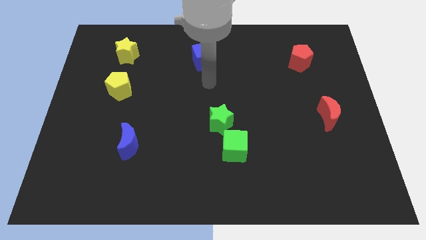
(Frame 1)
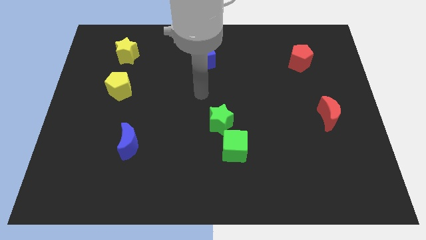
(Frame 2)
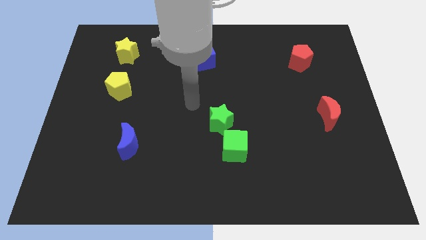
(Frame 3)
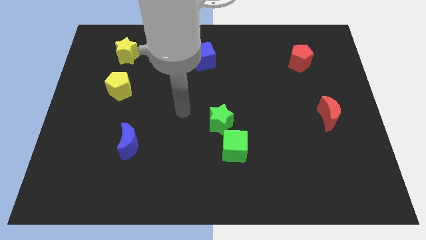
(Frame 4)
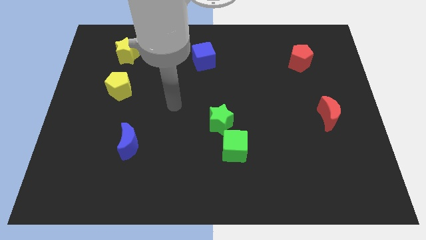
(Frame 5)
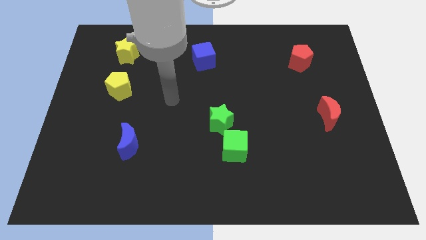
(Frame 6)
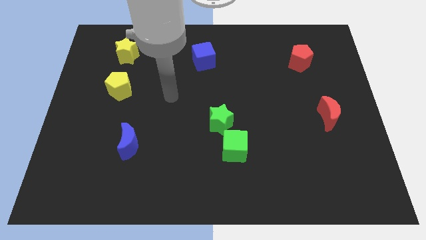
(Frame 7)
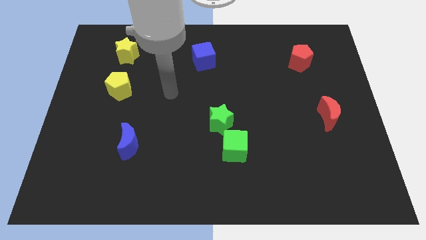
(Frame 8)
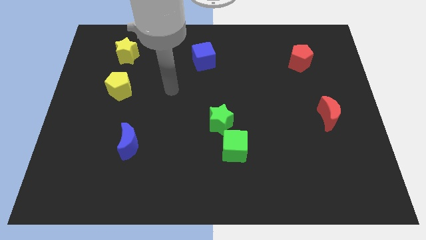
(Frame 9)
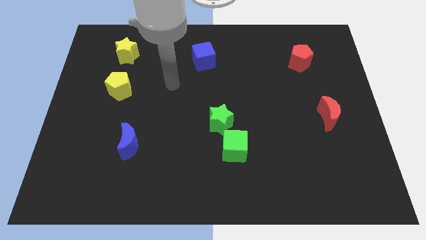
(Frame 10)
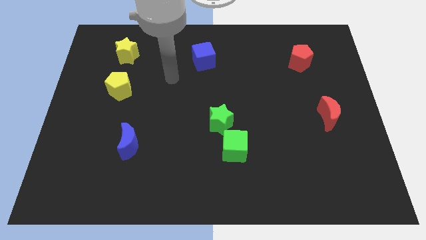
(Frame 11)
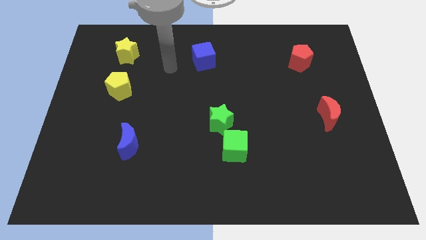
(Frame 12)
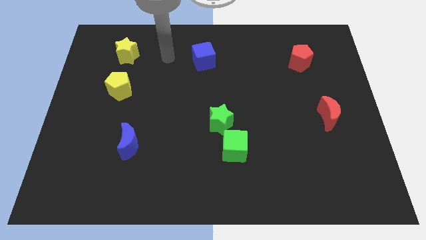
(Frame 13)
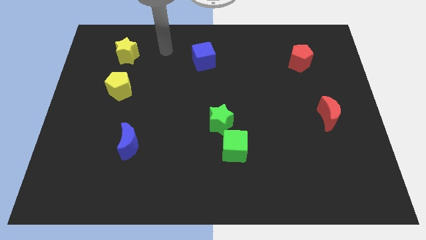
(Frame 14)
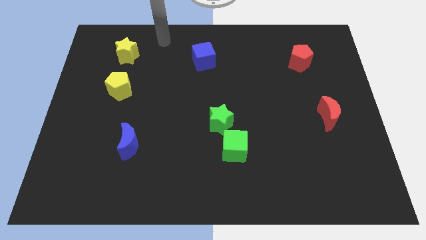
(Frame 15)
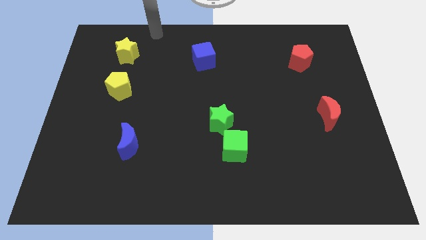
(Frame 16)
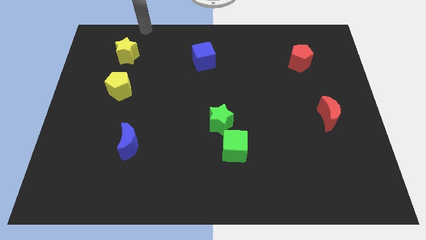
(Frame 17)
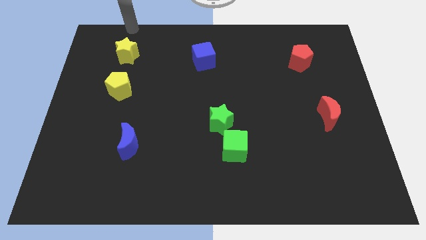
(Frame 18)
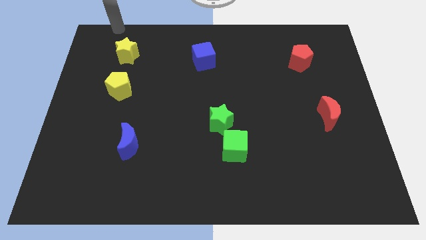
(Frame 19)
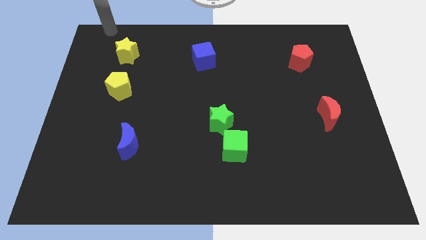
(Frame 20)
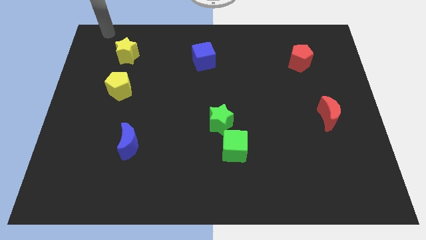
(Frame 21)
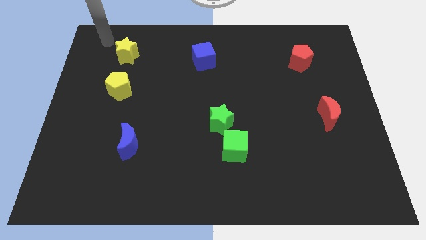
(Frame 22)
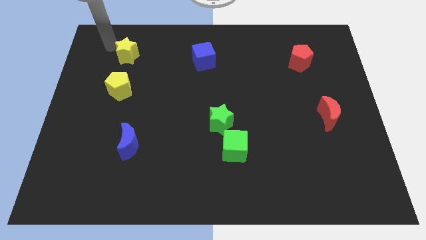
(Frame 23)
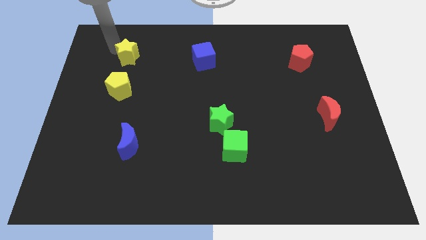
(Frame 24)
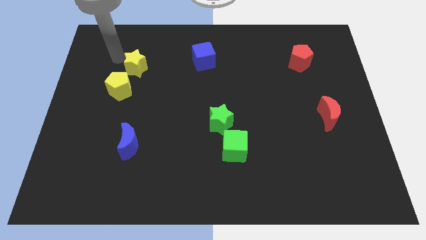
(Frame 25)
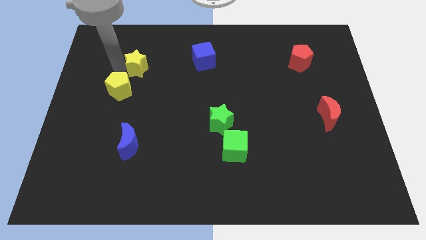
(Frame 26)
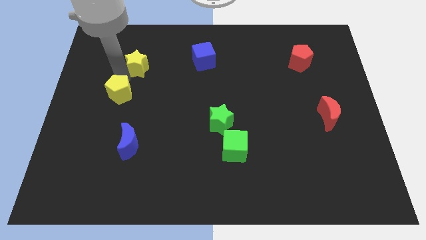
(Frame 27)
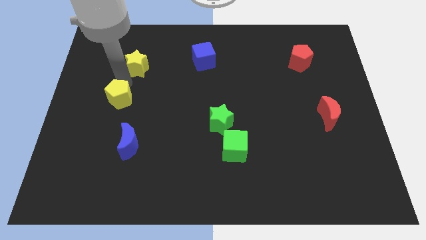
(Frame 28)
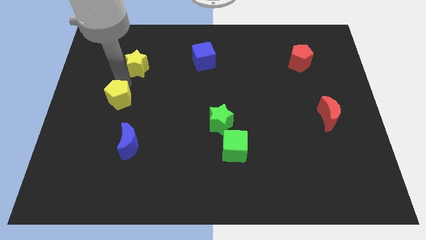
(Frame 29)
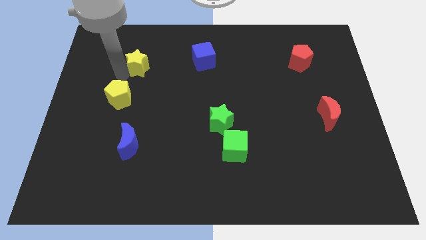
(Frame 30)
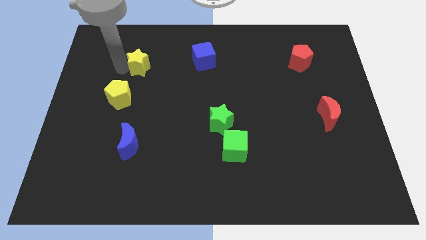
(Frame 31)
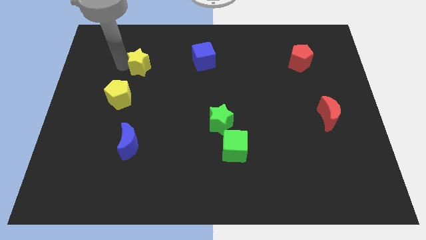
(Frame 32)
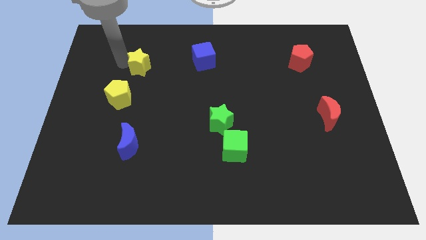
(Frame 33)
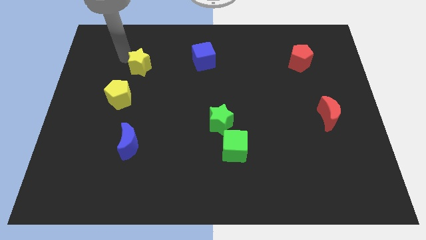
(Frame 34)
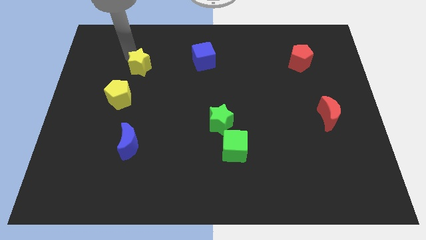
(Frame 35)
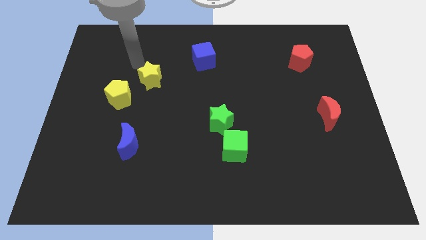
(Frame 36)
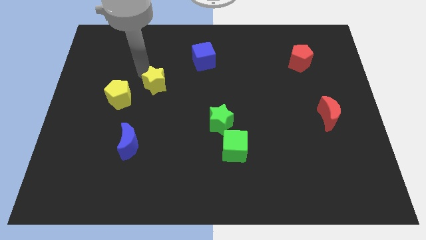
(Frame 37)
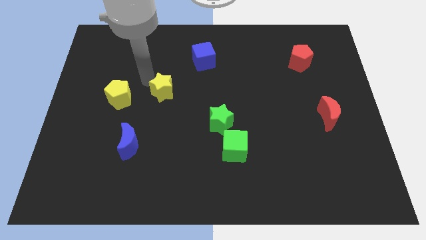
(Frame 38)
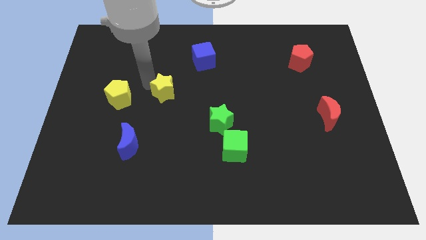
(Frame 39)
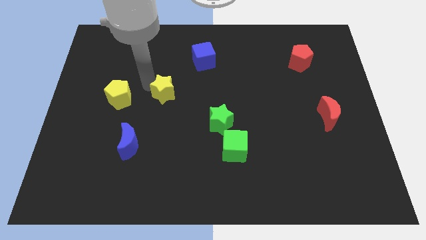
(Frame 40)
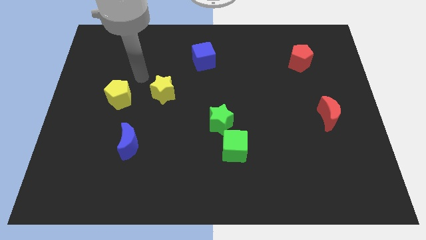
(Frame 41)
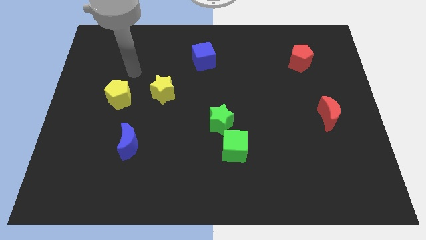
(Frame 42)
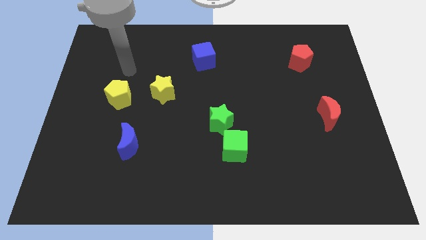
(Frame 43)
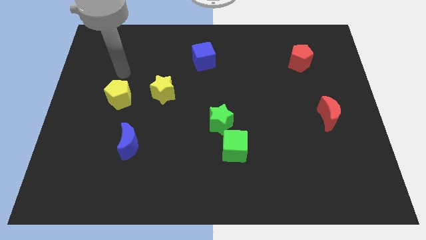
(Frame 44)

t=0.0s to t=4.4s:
push the yellow star to the right of the yellow pentagon

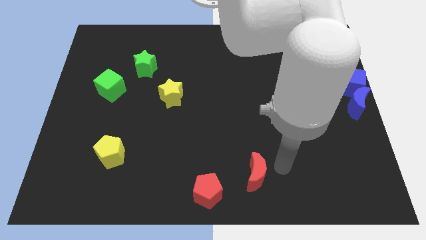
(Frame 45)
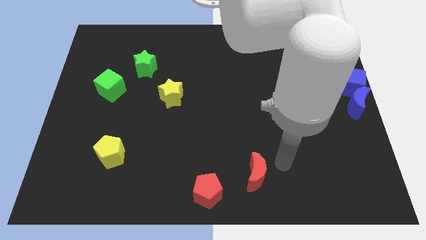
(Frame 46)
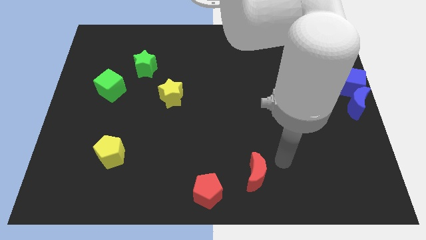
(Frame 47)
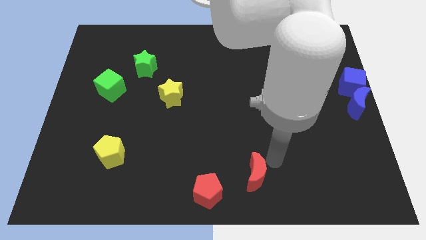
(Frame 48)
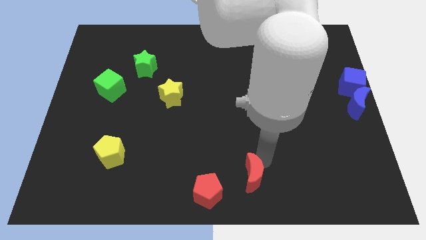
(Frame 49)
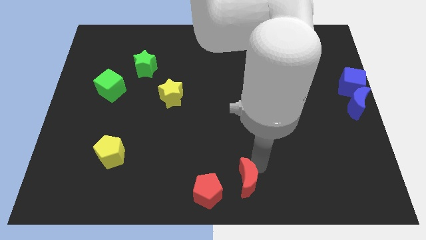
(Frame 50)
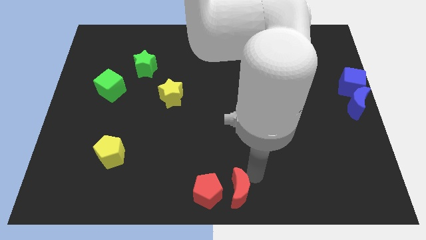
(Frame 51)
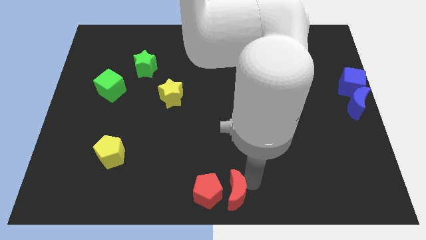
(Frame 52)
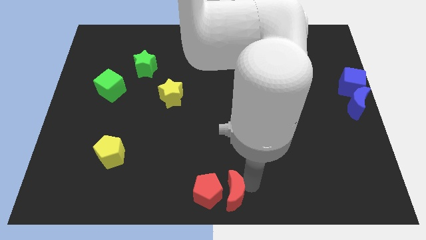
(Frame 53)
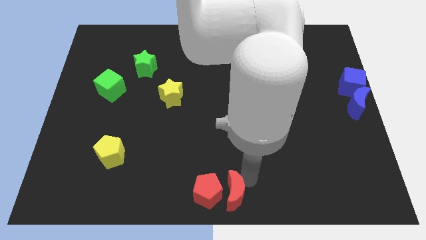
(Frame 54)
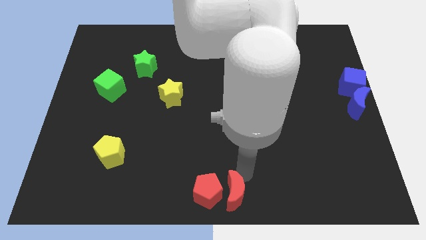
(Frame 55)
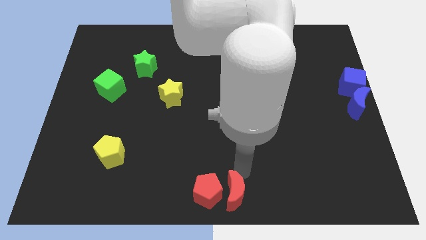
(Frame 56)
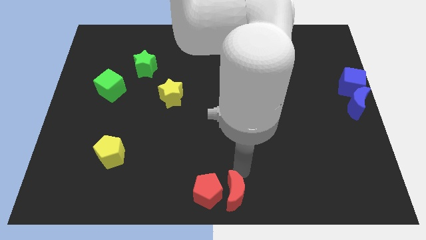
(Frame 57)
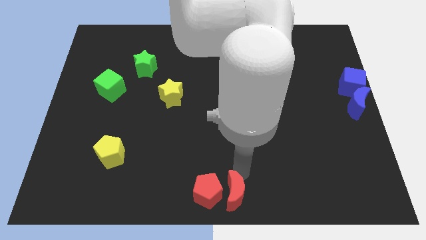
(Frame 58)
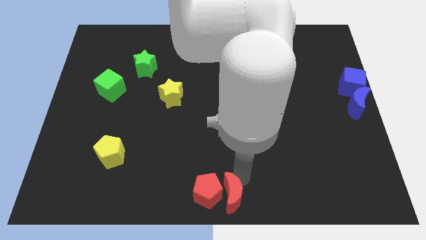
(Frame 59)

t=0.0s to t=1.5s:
place the red crescent to the right side of the red pentagon

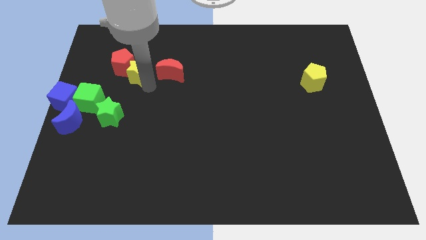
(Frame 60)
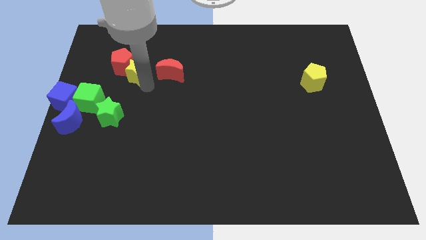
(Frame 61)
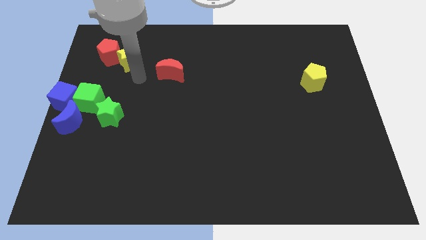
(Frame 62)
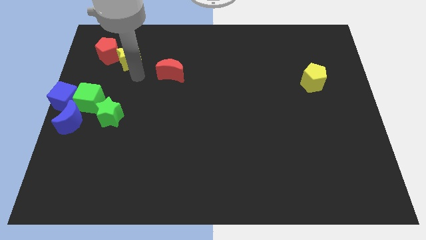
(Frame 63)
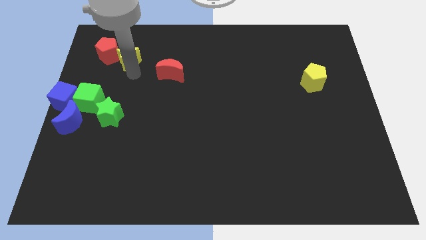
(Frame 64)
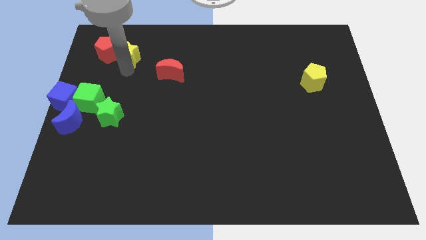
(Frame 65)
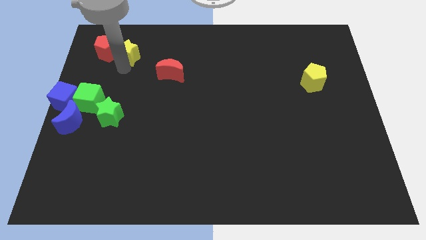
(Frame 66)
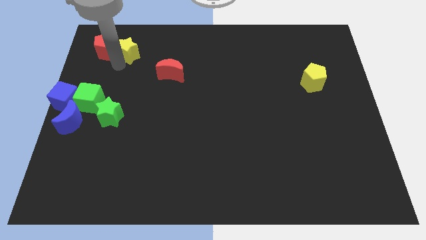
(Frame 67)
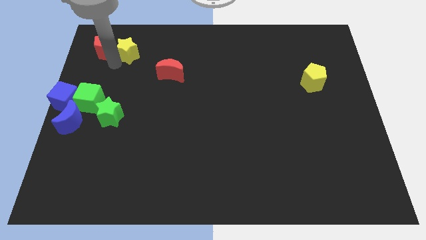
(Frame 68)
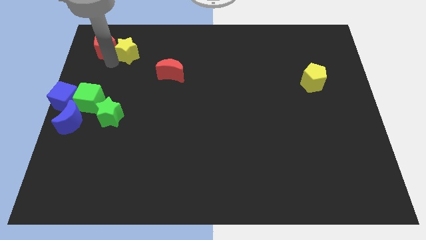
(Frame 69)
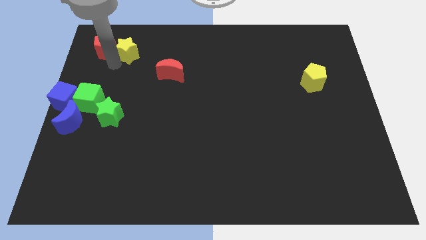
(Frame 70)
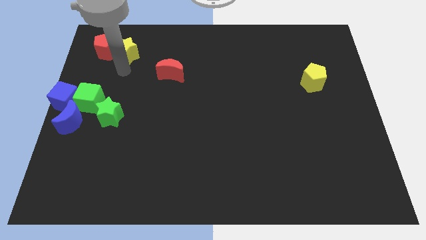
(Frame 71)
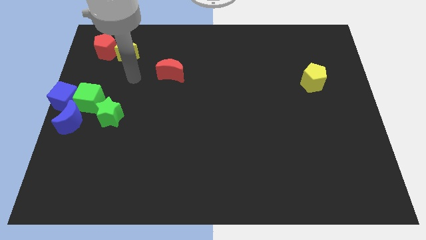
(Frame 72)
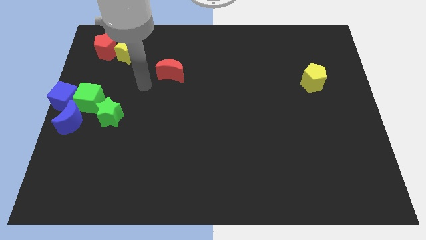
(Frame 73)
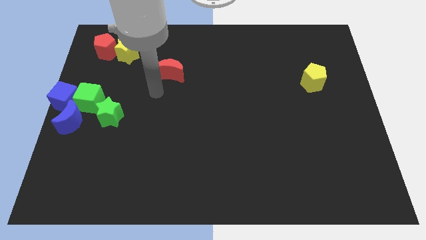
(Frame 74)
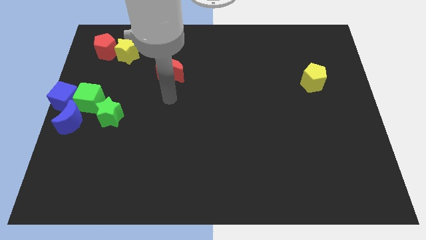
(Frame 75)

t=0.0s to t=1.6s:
slide the red pentagon and yellow star to the top left corner of the board

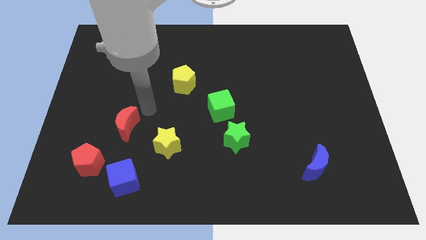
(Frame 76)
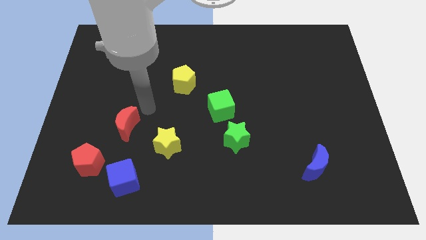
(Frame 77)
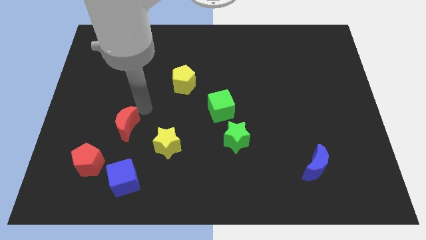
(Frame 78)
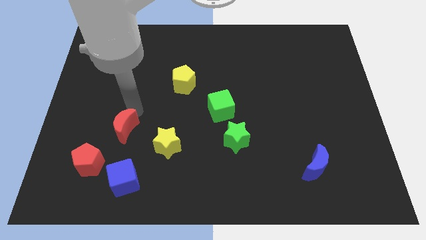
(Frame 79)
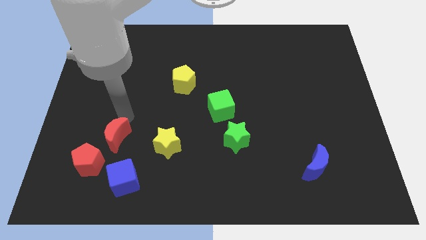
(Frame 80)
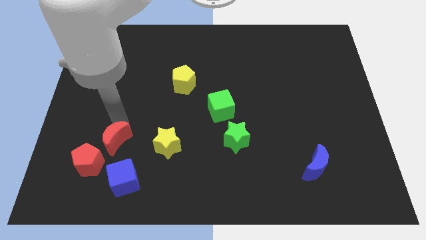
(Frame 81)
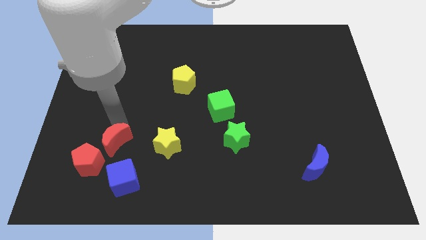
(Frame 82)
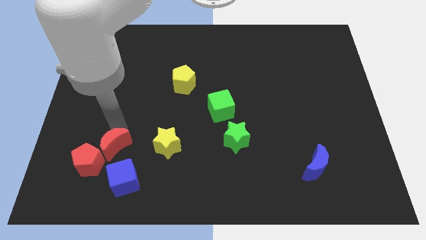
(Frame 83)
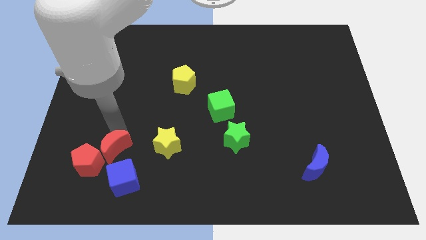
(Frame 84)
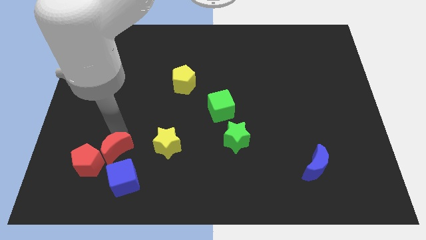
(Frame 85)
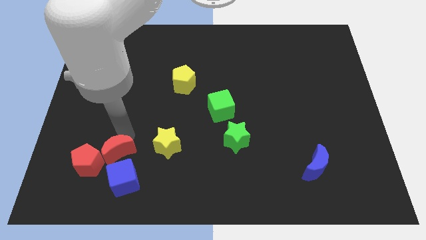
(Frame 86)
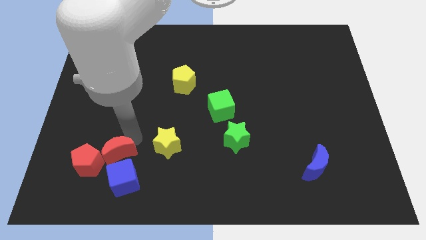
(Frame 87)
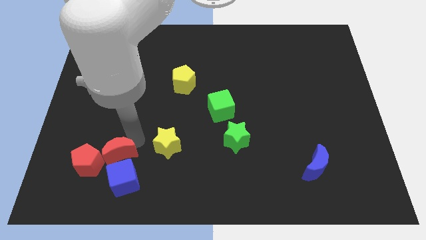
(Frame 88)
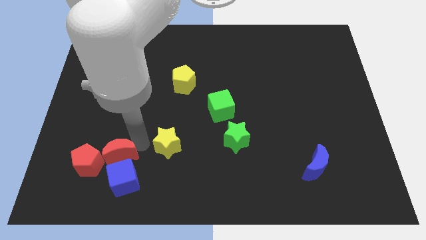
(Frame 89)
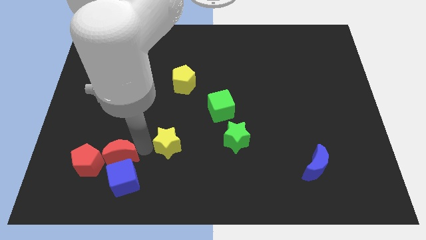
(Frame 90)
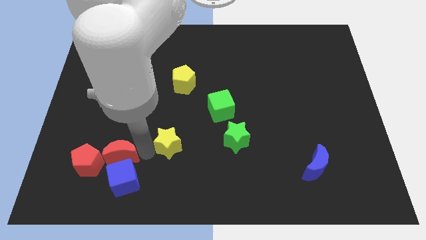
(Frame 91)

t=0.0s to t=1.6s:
place red moon to the right of red pentagon
